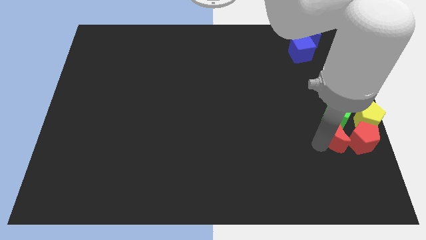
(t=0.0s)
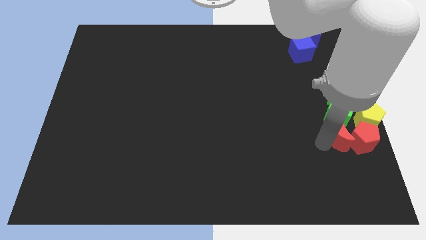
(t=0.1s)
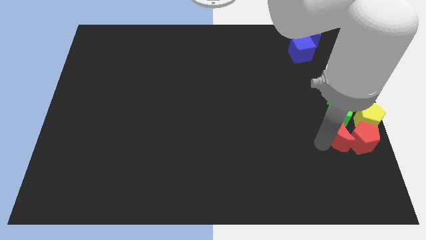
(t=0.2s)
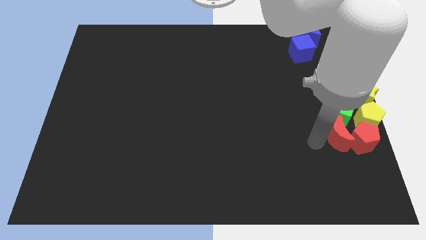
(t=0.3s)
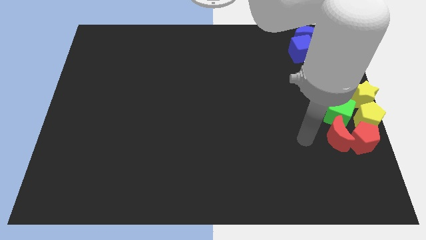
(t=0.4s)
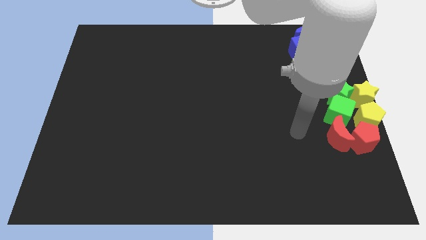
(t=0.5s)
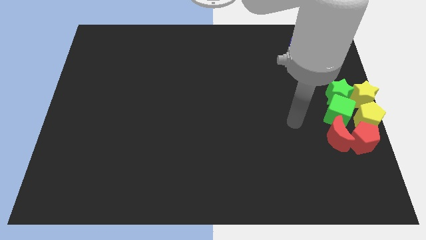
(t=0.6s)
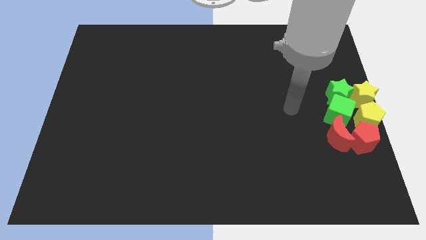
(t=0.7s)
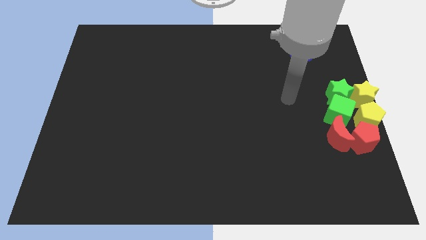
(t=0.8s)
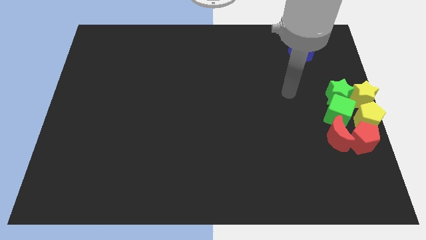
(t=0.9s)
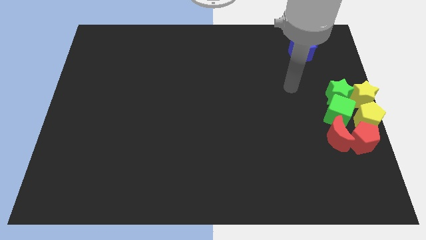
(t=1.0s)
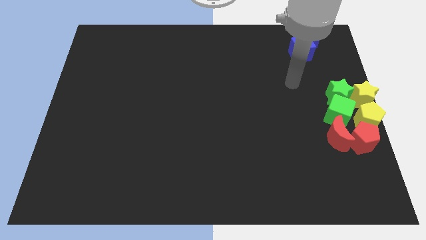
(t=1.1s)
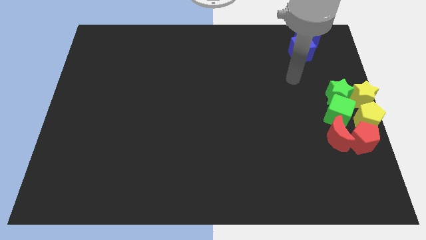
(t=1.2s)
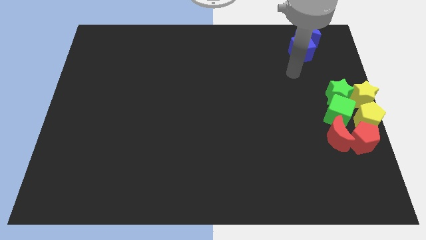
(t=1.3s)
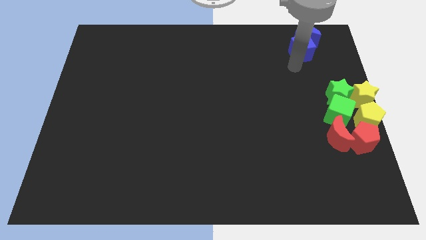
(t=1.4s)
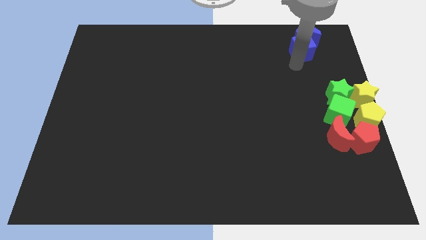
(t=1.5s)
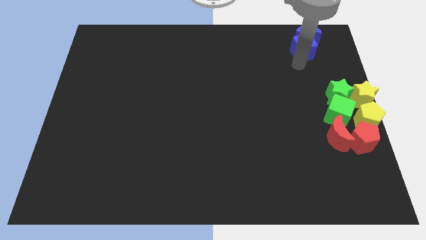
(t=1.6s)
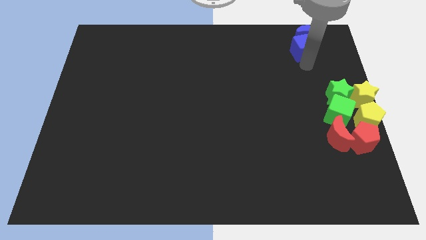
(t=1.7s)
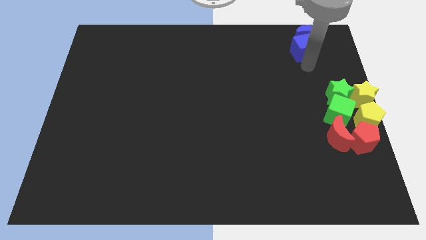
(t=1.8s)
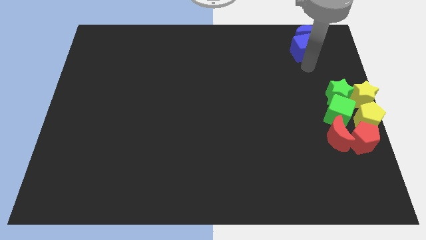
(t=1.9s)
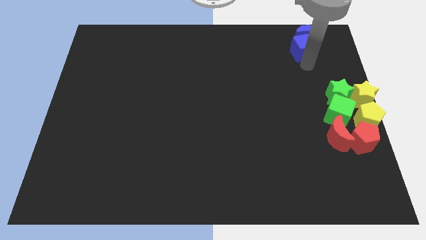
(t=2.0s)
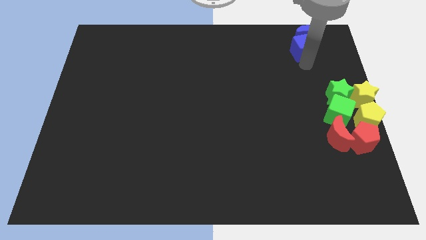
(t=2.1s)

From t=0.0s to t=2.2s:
move your arm towards the blue cube

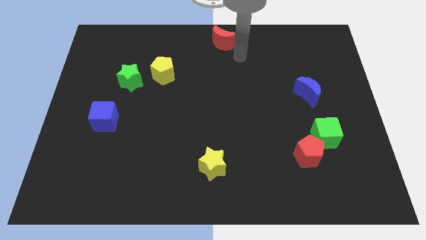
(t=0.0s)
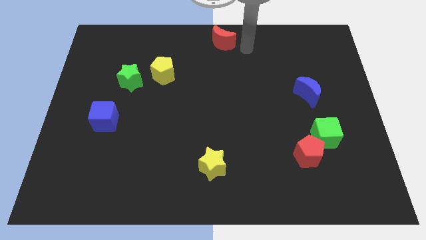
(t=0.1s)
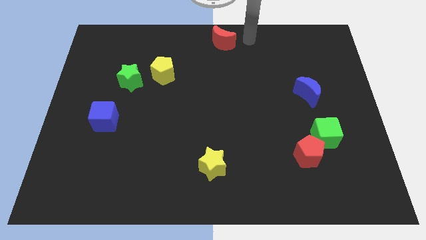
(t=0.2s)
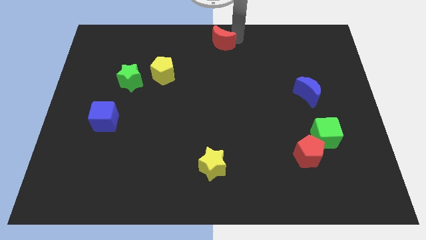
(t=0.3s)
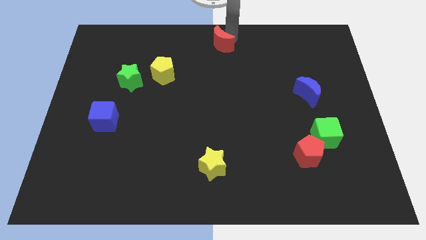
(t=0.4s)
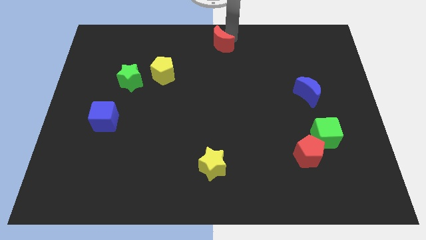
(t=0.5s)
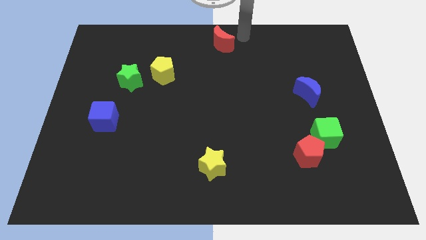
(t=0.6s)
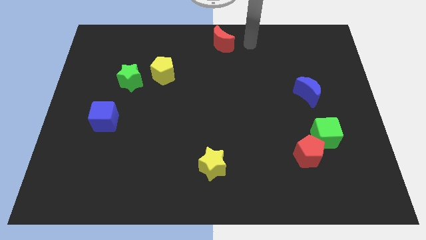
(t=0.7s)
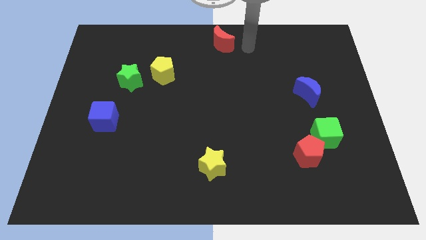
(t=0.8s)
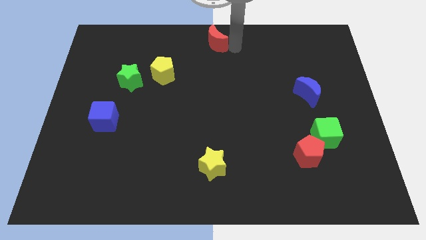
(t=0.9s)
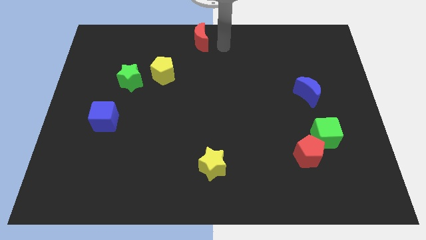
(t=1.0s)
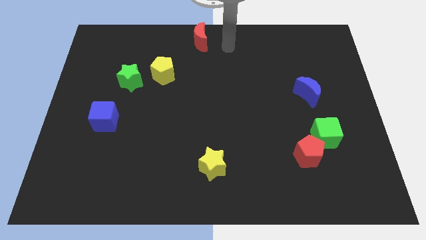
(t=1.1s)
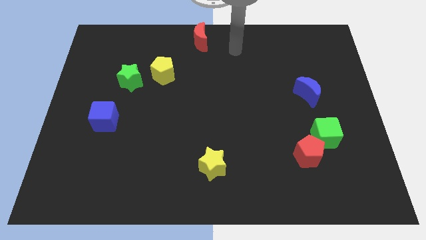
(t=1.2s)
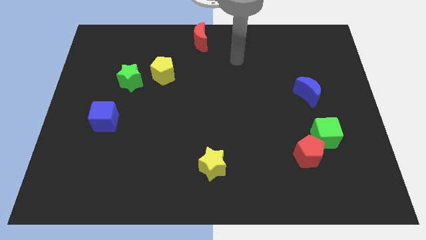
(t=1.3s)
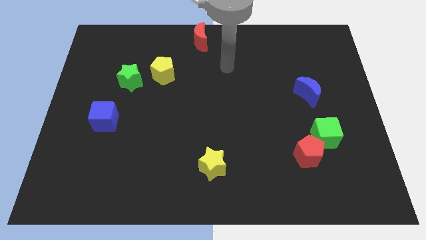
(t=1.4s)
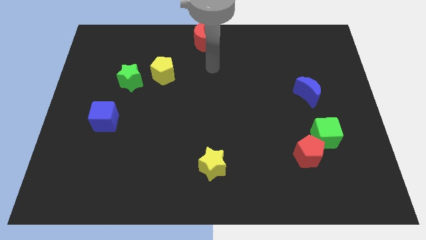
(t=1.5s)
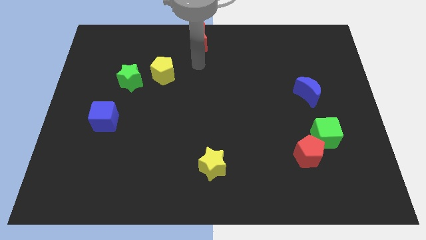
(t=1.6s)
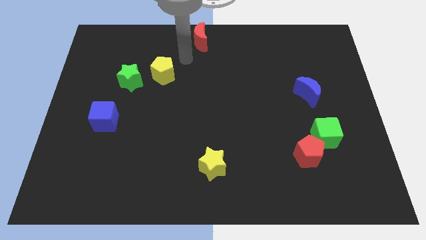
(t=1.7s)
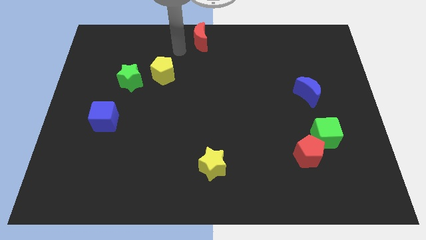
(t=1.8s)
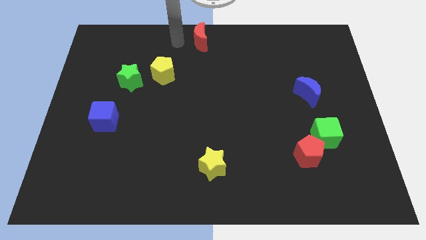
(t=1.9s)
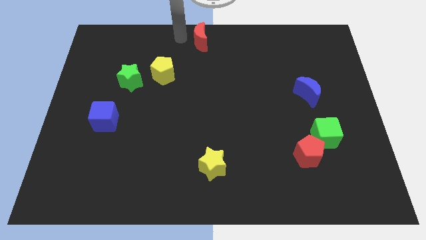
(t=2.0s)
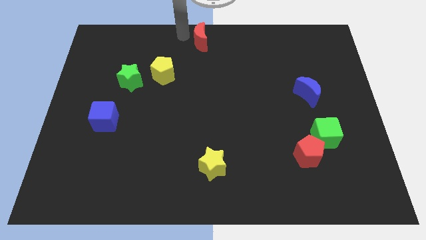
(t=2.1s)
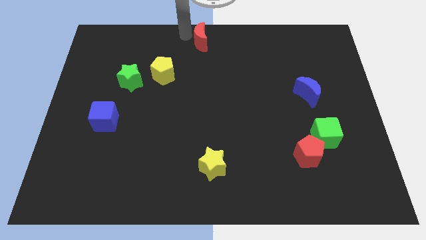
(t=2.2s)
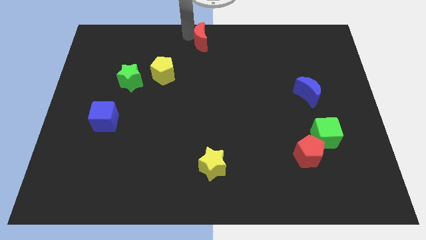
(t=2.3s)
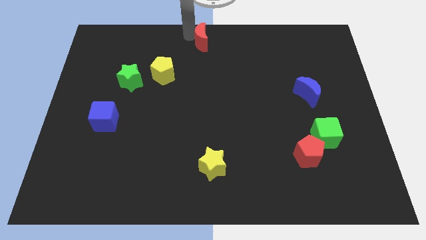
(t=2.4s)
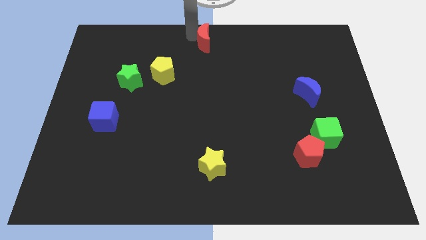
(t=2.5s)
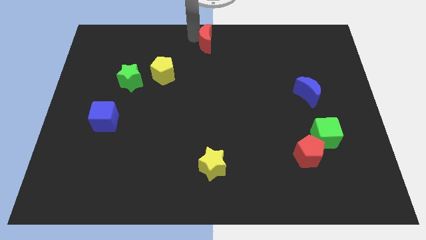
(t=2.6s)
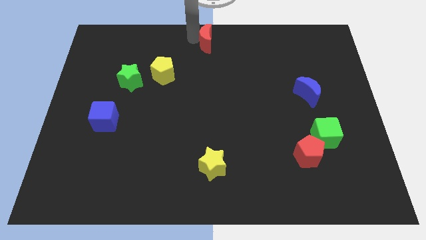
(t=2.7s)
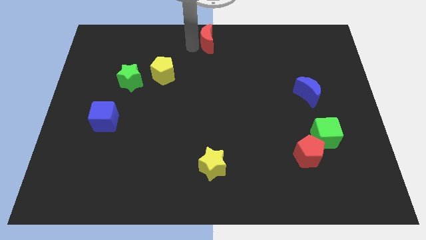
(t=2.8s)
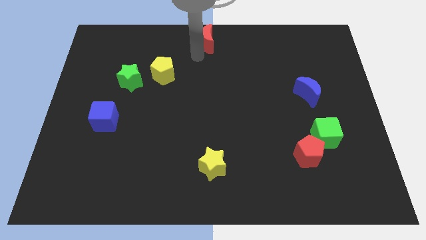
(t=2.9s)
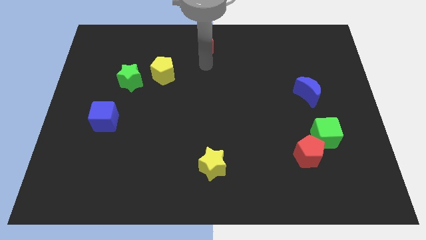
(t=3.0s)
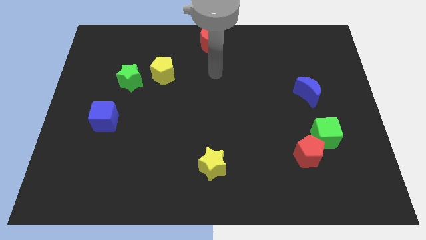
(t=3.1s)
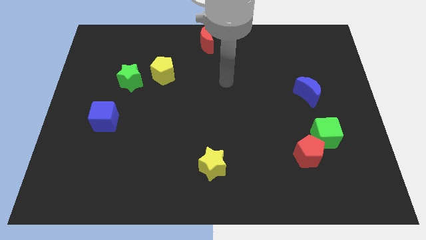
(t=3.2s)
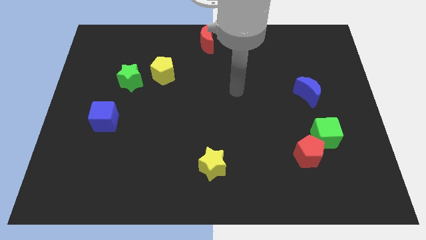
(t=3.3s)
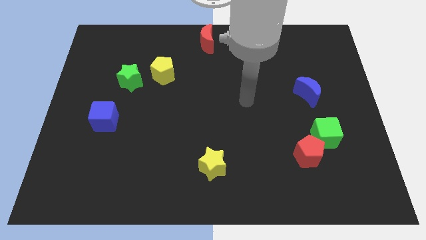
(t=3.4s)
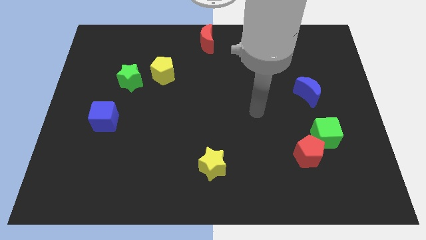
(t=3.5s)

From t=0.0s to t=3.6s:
adjust the red crescent at the top center

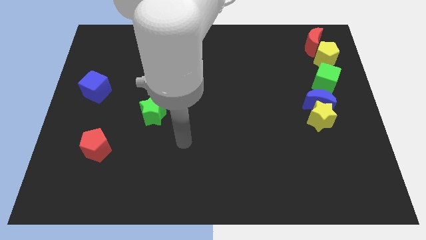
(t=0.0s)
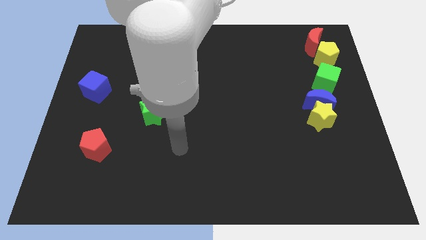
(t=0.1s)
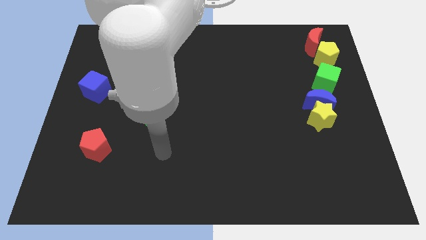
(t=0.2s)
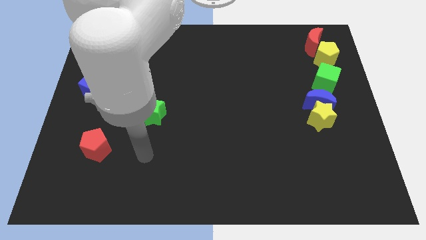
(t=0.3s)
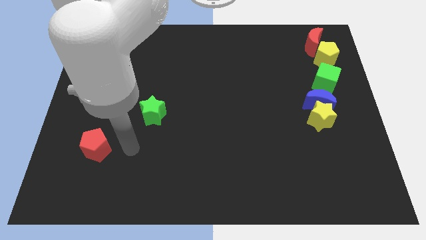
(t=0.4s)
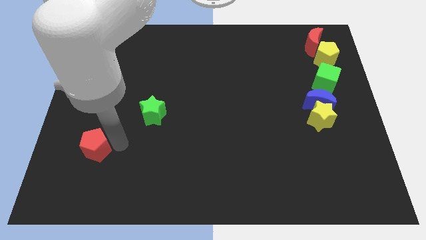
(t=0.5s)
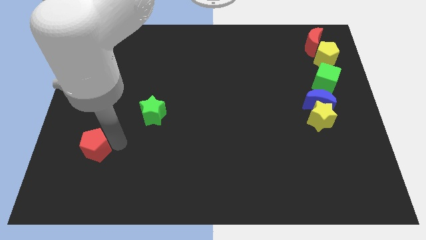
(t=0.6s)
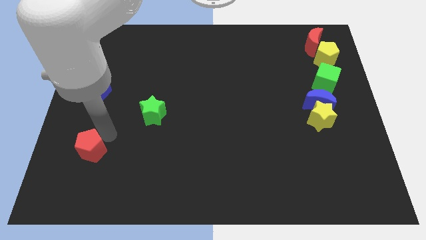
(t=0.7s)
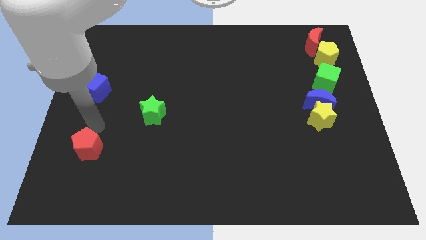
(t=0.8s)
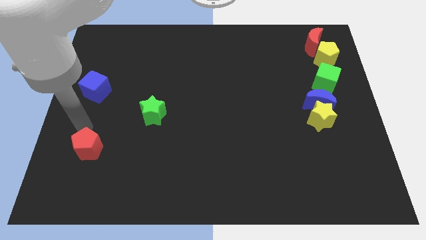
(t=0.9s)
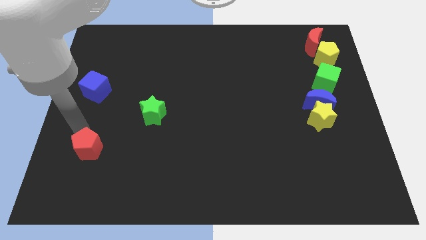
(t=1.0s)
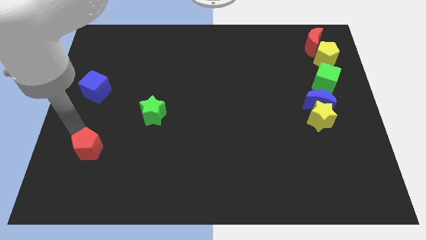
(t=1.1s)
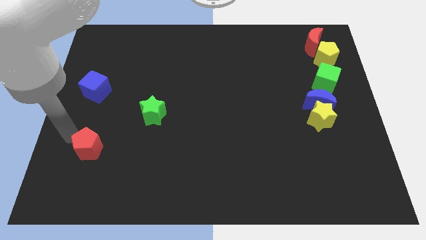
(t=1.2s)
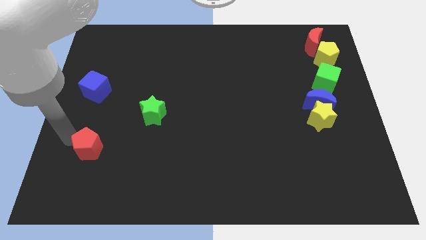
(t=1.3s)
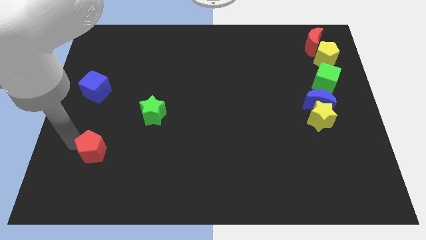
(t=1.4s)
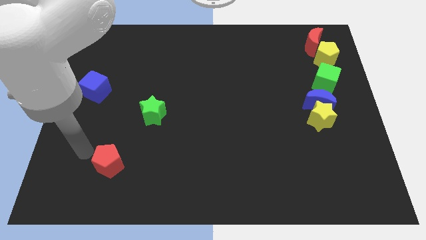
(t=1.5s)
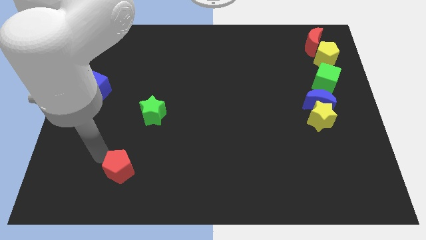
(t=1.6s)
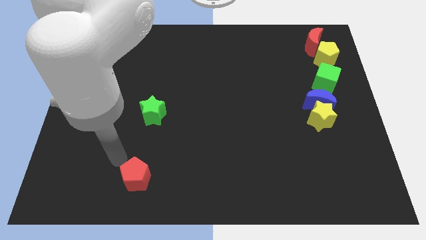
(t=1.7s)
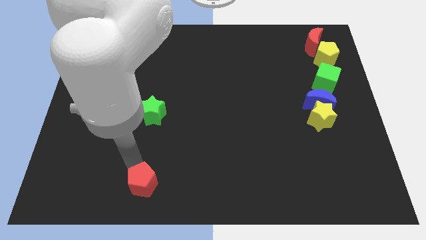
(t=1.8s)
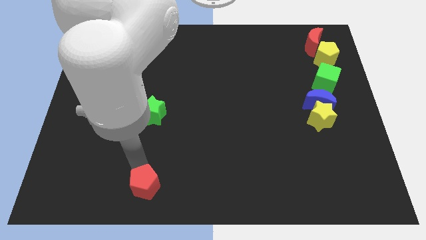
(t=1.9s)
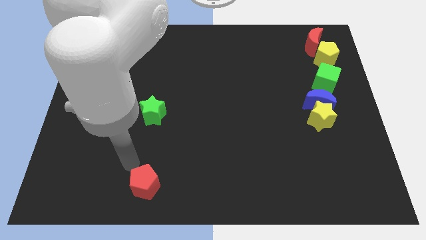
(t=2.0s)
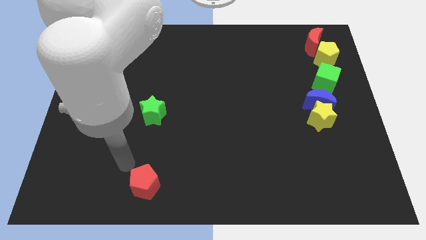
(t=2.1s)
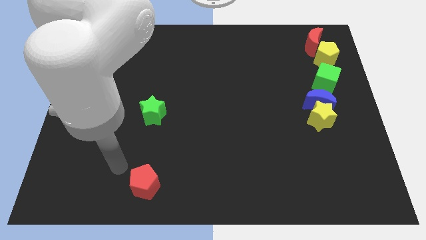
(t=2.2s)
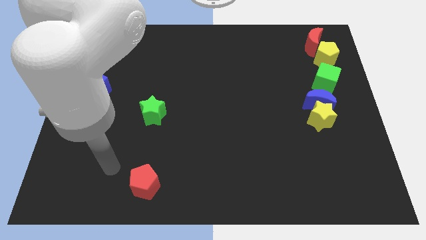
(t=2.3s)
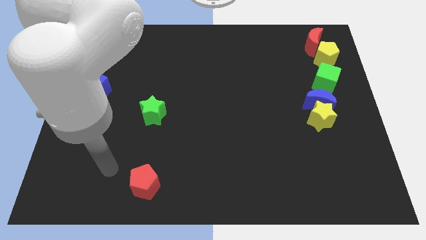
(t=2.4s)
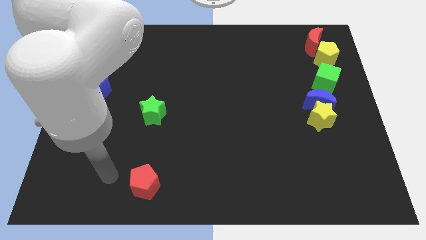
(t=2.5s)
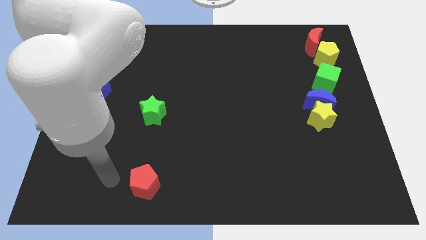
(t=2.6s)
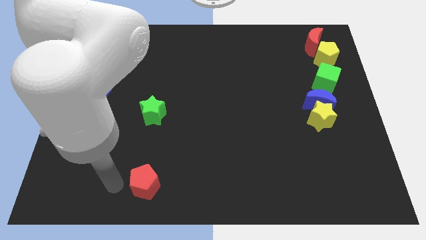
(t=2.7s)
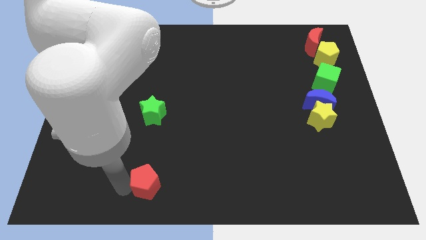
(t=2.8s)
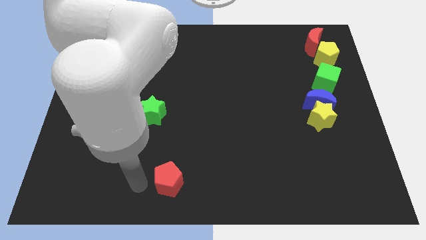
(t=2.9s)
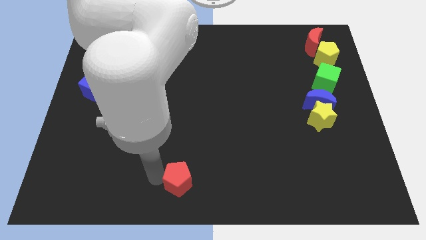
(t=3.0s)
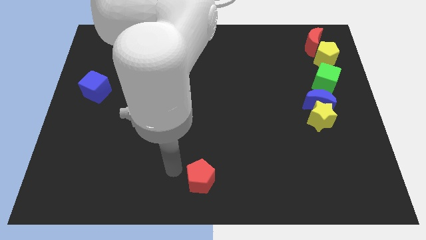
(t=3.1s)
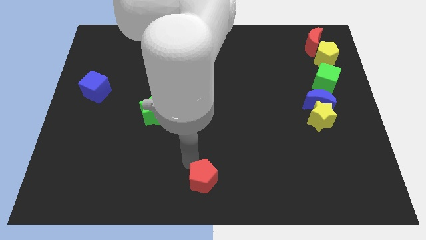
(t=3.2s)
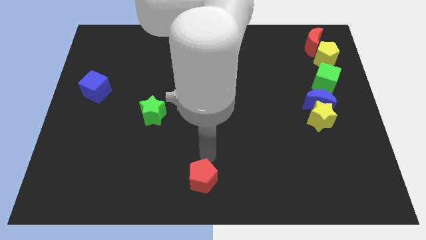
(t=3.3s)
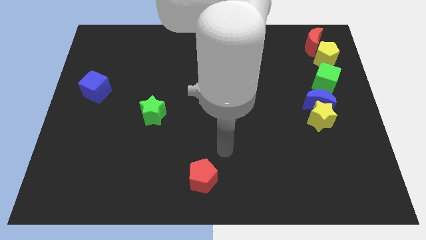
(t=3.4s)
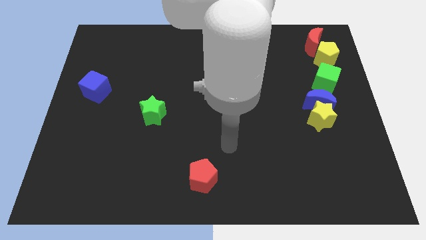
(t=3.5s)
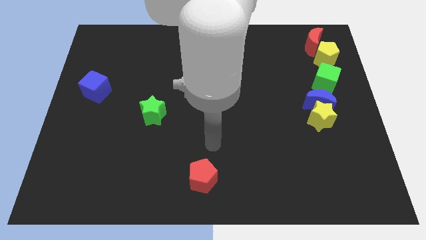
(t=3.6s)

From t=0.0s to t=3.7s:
push the red pentagon to the bottom center of the board
